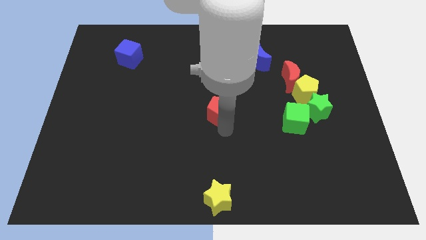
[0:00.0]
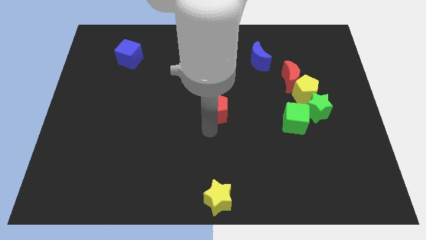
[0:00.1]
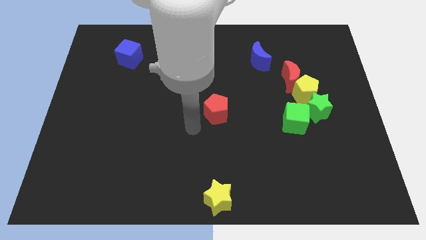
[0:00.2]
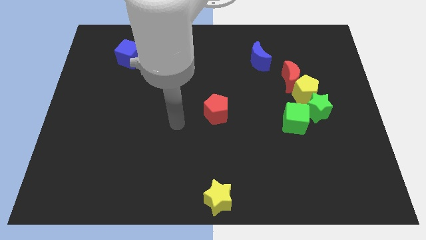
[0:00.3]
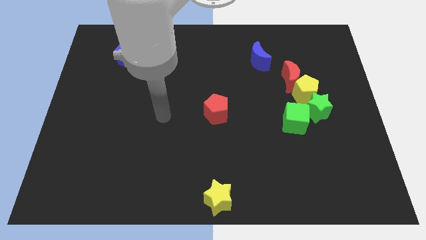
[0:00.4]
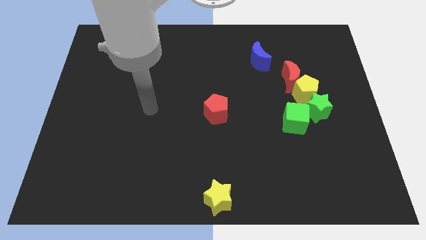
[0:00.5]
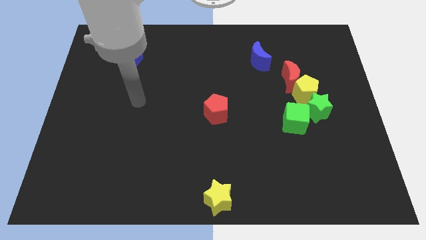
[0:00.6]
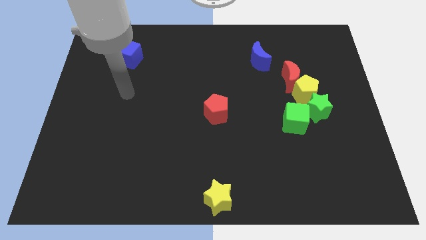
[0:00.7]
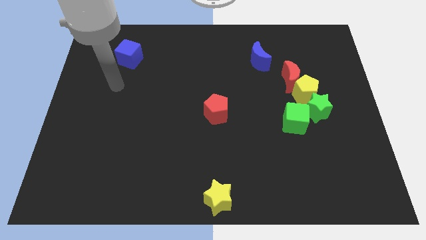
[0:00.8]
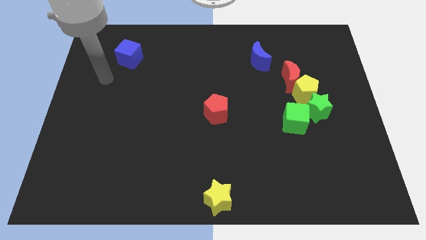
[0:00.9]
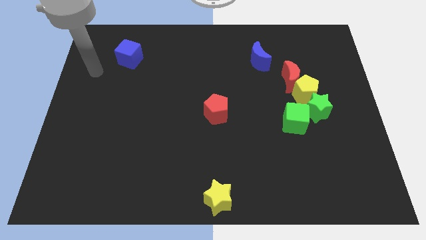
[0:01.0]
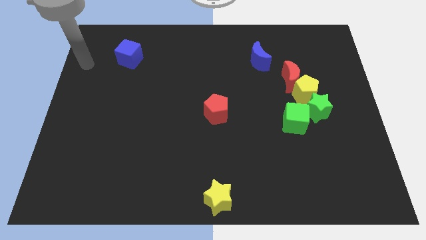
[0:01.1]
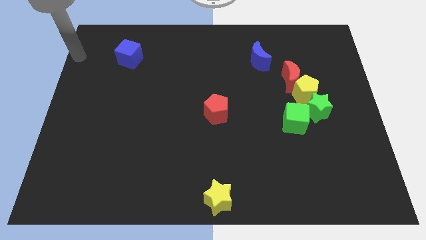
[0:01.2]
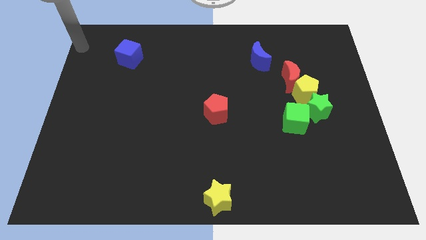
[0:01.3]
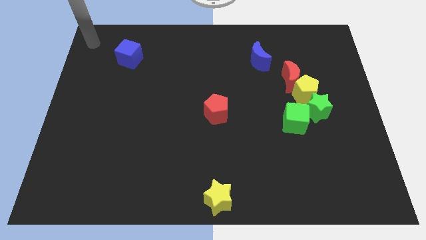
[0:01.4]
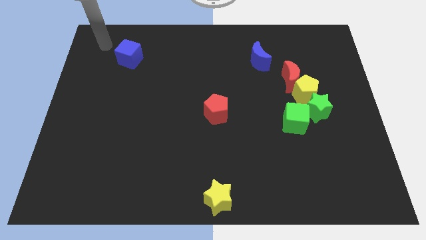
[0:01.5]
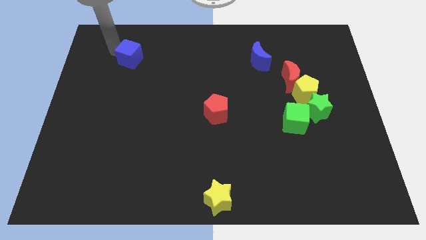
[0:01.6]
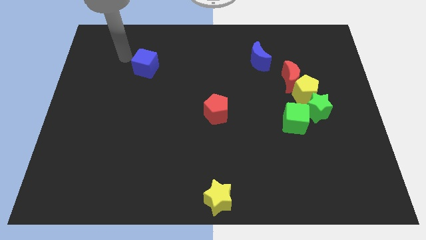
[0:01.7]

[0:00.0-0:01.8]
point your arm towards the left of the blue cube

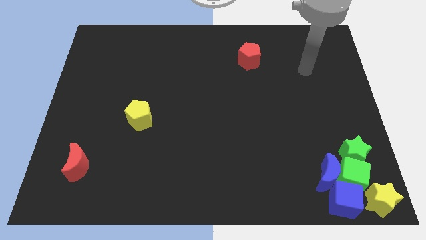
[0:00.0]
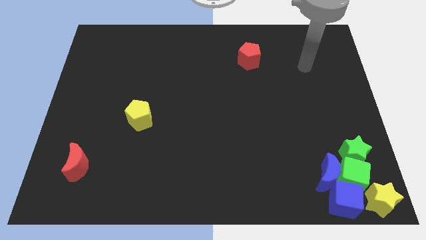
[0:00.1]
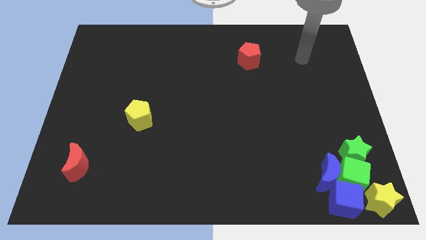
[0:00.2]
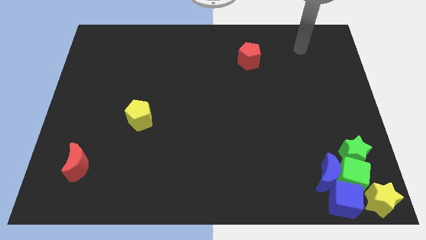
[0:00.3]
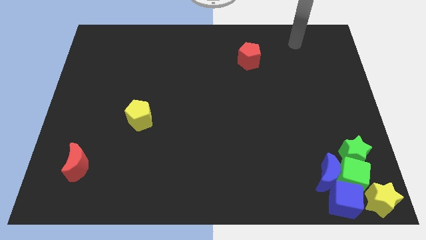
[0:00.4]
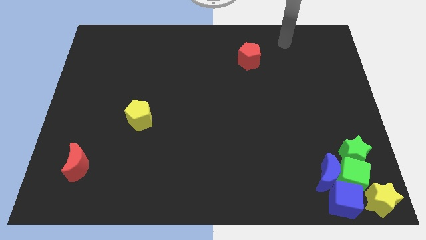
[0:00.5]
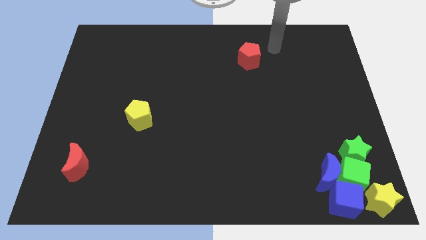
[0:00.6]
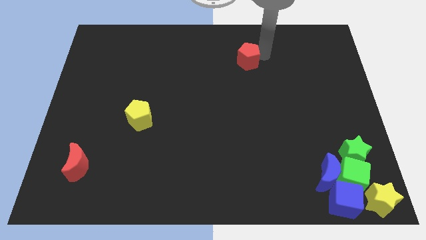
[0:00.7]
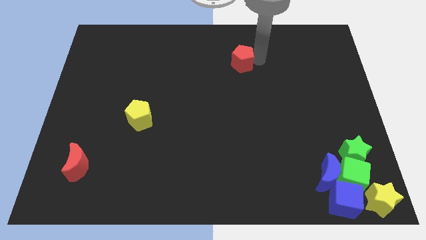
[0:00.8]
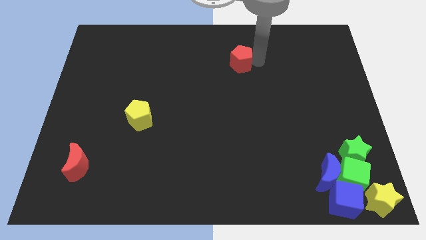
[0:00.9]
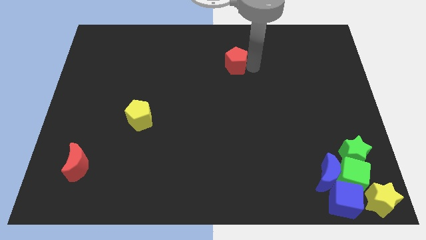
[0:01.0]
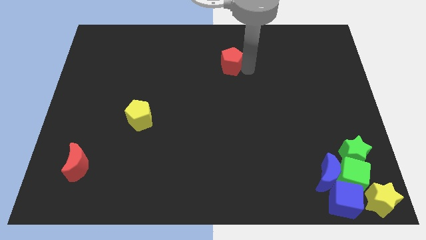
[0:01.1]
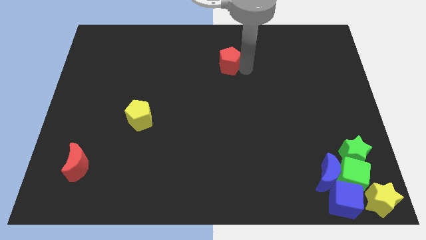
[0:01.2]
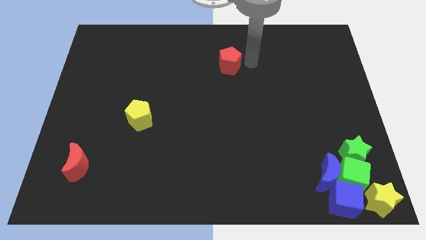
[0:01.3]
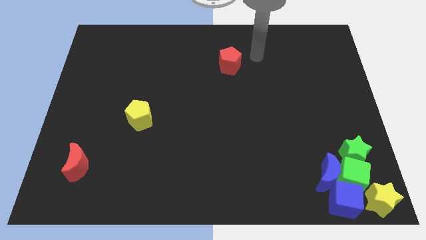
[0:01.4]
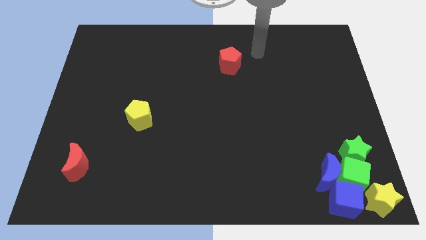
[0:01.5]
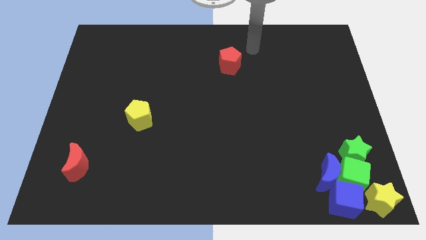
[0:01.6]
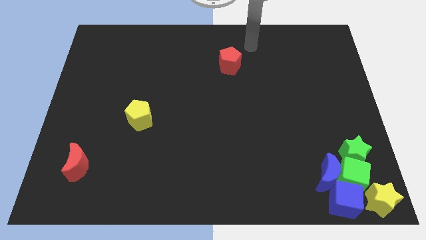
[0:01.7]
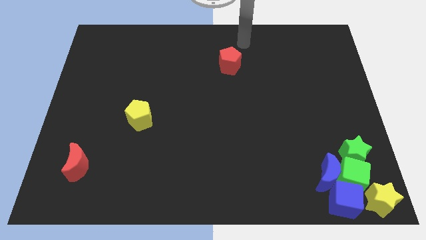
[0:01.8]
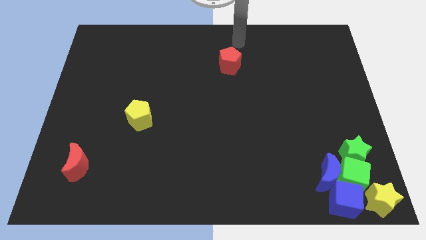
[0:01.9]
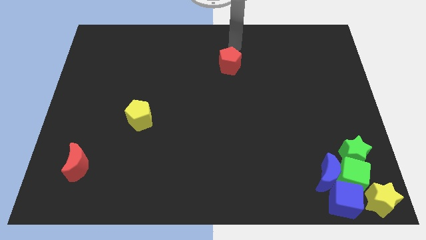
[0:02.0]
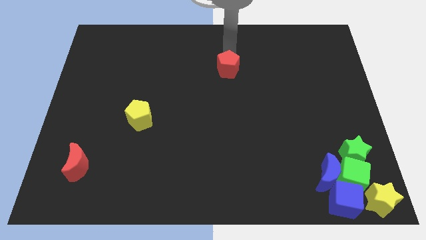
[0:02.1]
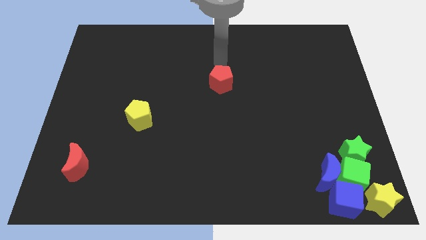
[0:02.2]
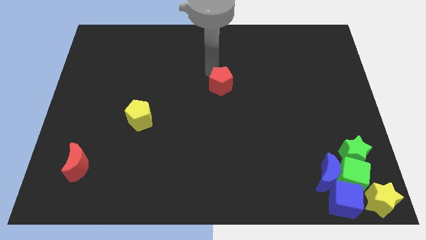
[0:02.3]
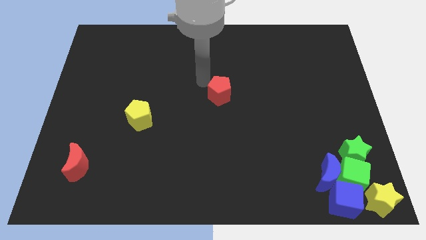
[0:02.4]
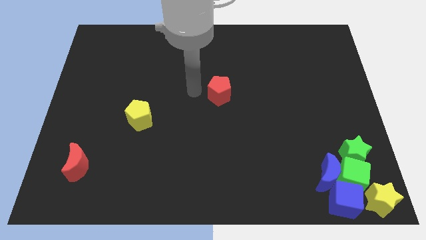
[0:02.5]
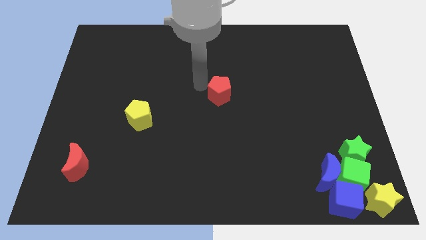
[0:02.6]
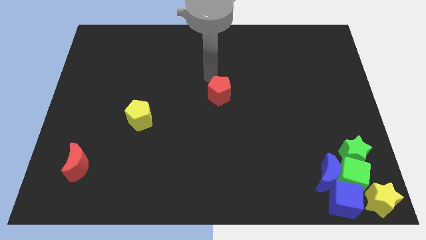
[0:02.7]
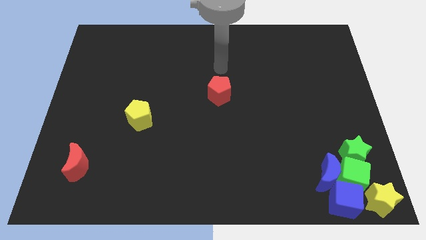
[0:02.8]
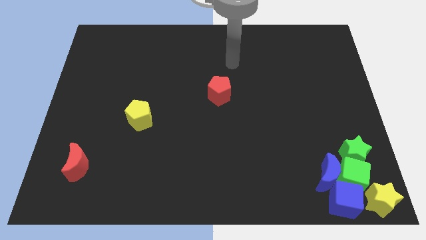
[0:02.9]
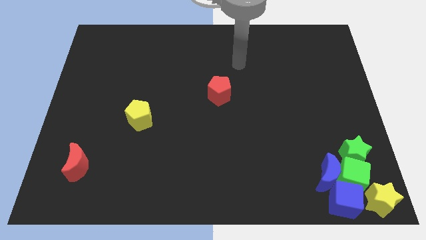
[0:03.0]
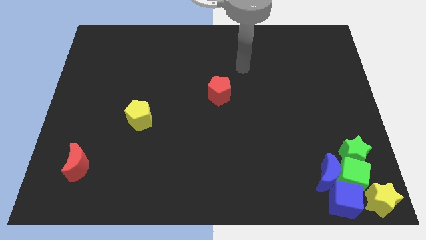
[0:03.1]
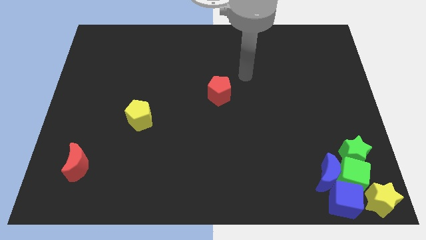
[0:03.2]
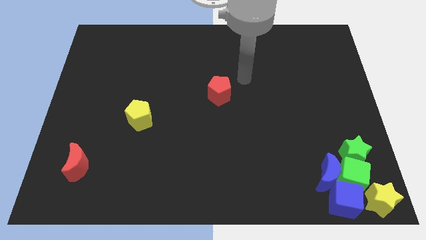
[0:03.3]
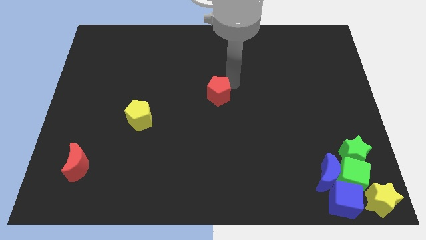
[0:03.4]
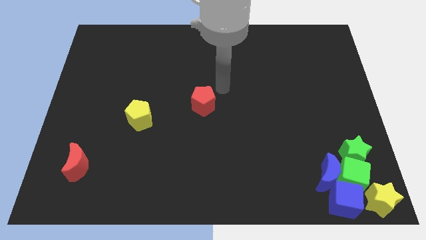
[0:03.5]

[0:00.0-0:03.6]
place red pentagon to the center of the board

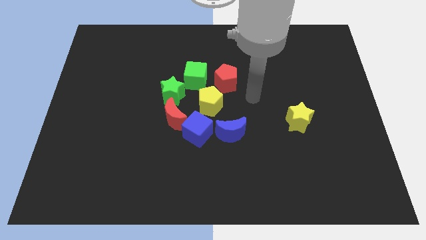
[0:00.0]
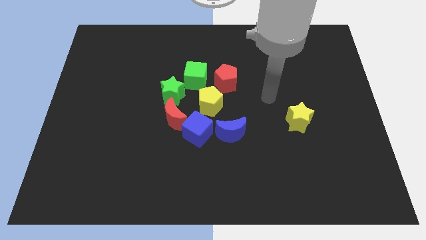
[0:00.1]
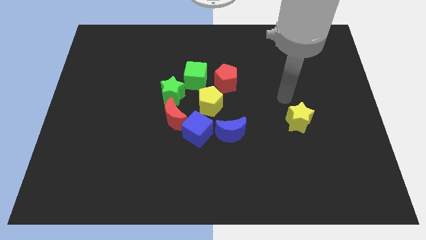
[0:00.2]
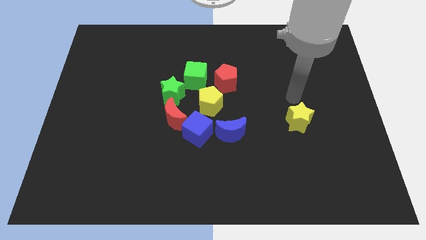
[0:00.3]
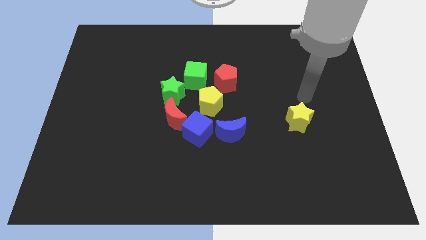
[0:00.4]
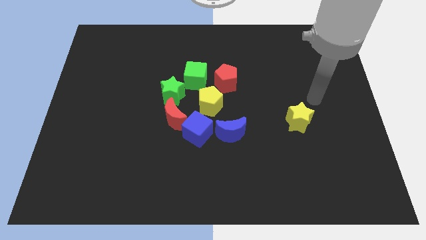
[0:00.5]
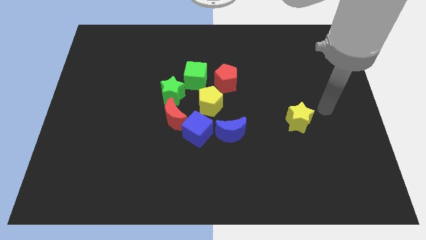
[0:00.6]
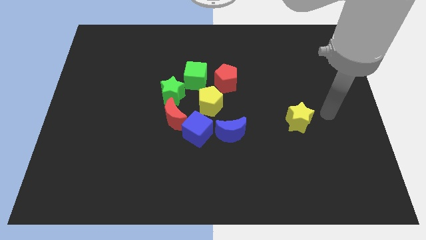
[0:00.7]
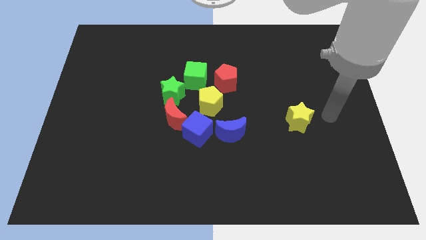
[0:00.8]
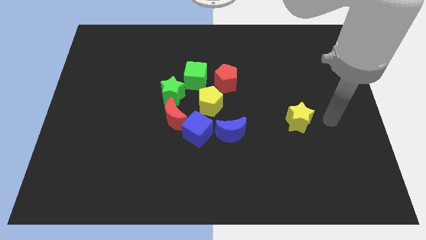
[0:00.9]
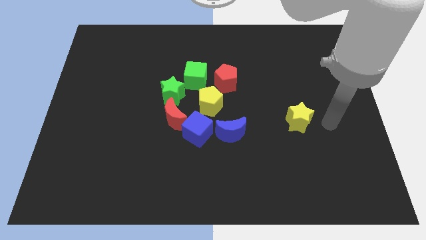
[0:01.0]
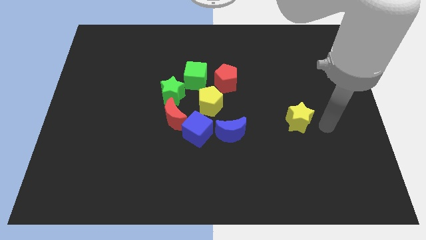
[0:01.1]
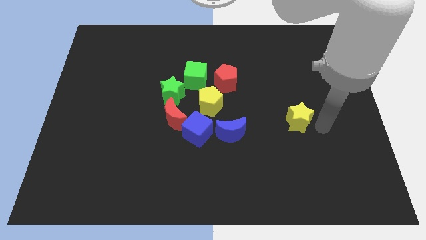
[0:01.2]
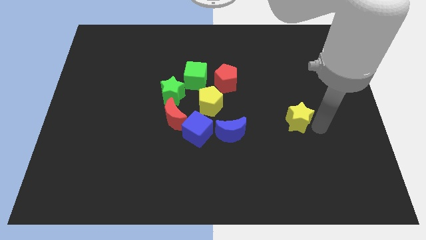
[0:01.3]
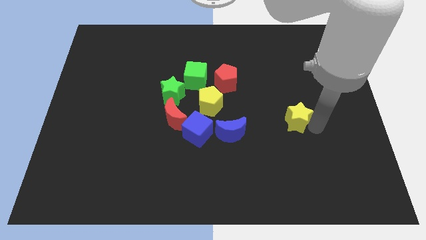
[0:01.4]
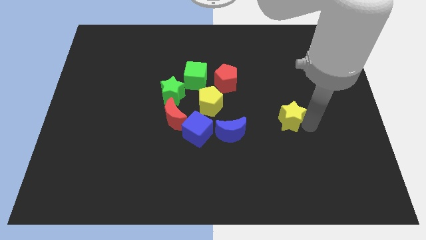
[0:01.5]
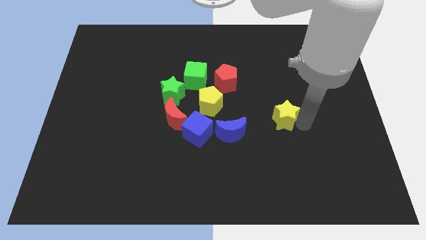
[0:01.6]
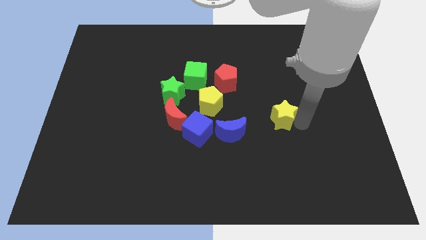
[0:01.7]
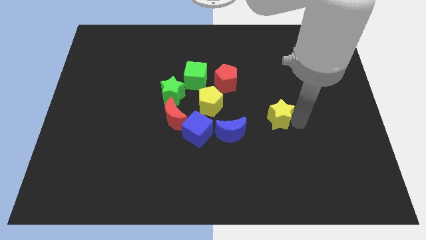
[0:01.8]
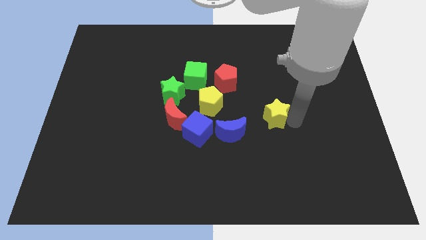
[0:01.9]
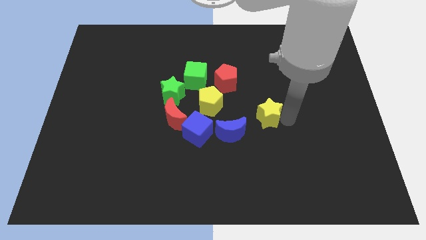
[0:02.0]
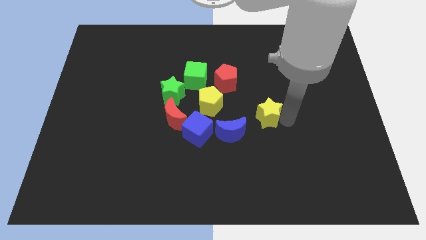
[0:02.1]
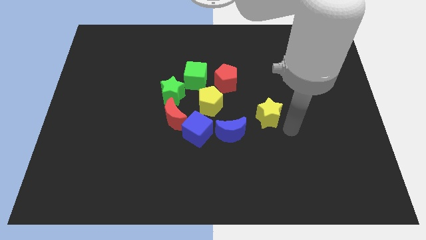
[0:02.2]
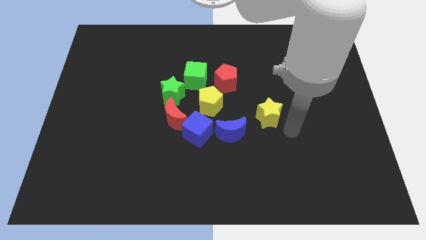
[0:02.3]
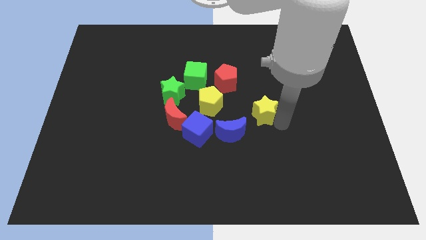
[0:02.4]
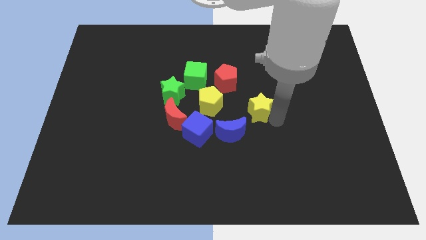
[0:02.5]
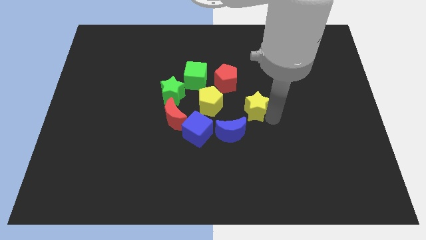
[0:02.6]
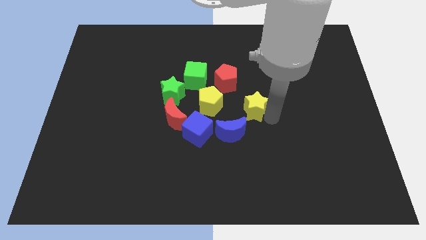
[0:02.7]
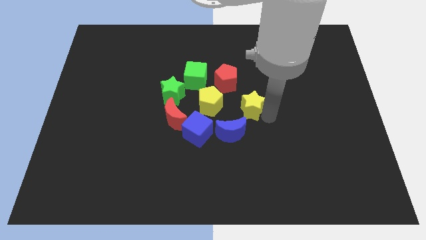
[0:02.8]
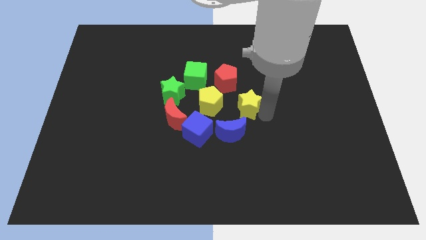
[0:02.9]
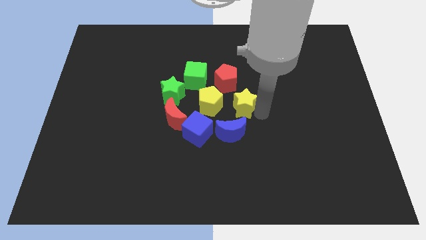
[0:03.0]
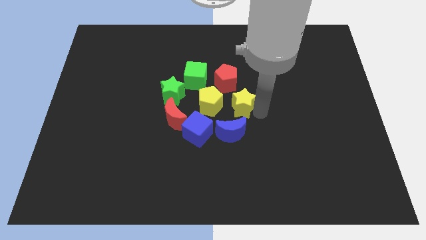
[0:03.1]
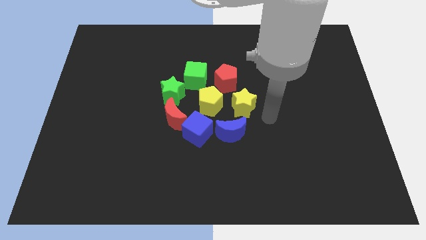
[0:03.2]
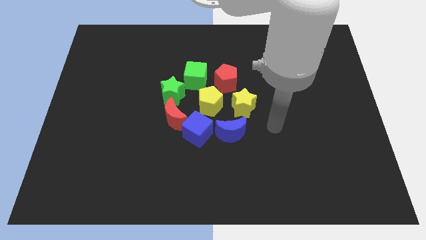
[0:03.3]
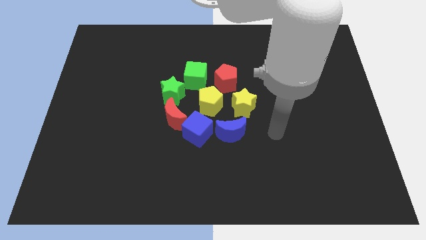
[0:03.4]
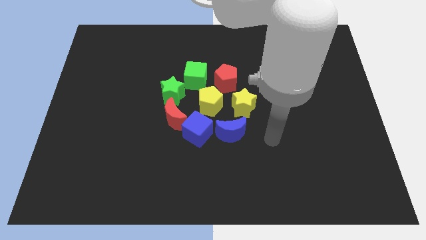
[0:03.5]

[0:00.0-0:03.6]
slide the yellow star slightly towards the yellow pentagon

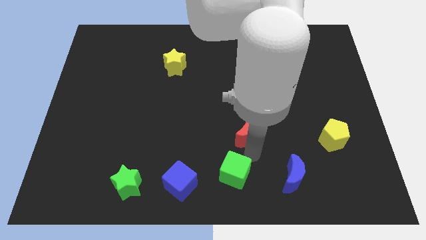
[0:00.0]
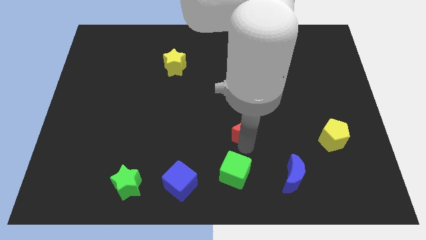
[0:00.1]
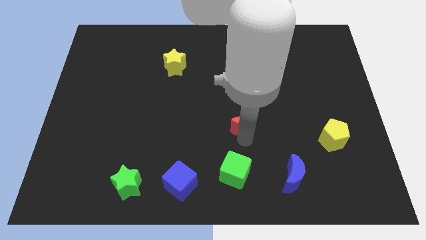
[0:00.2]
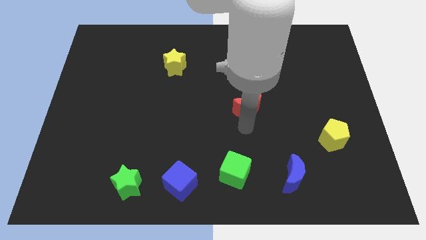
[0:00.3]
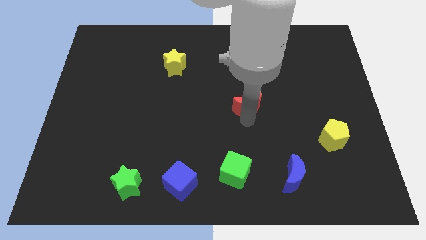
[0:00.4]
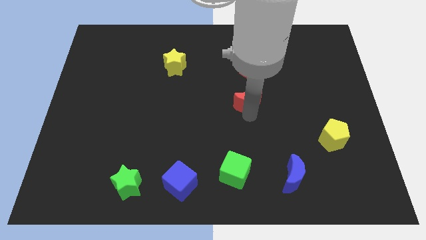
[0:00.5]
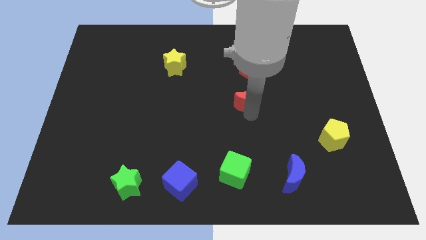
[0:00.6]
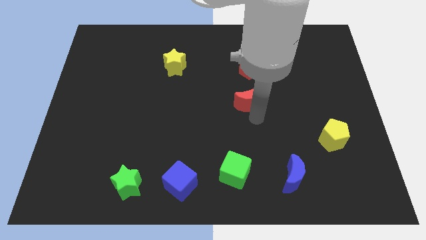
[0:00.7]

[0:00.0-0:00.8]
move the red crescent towards the bottom of the red pentagon
